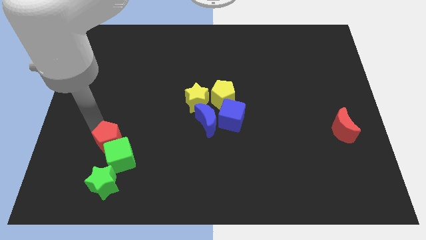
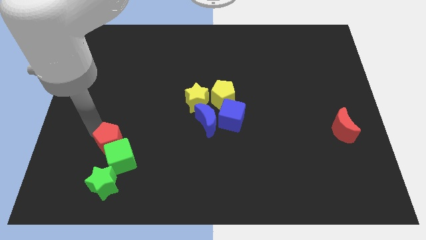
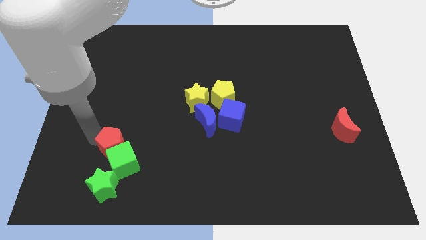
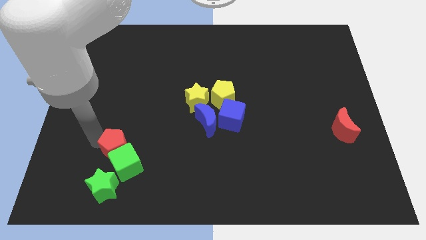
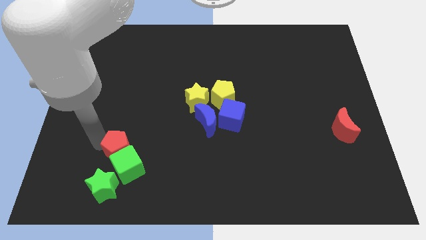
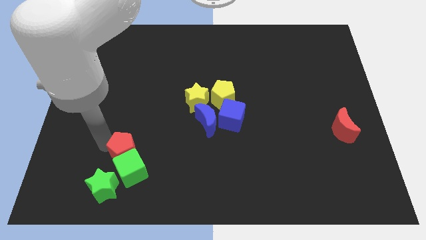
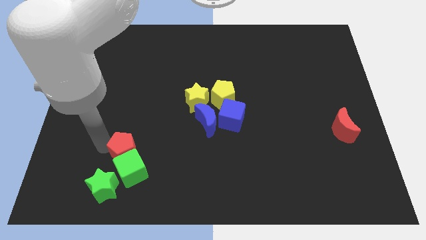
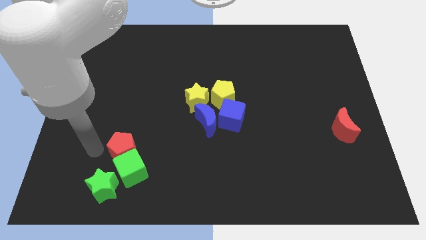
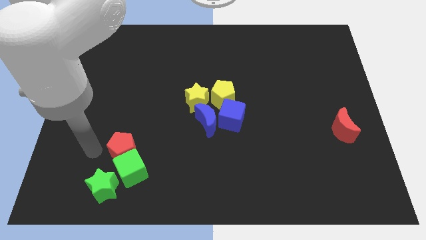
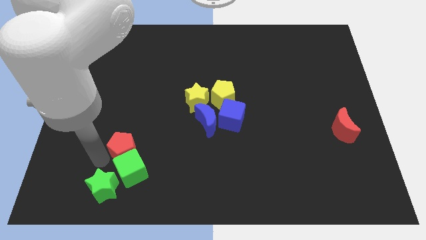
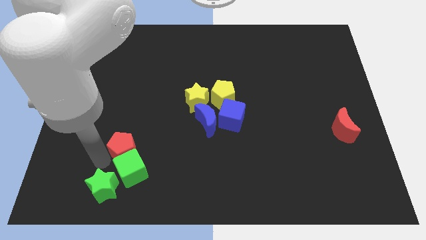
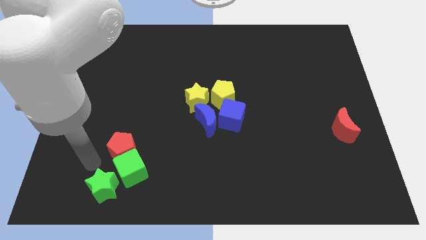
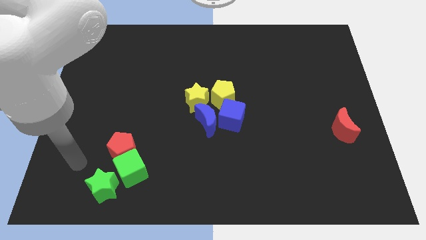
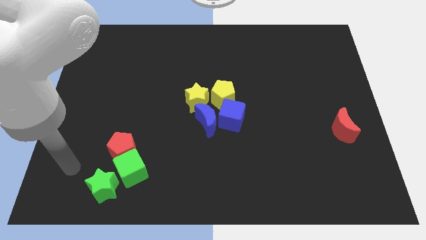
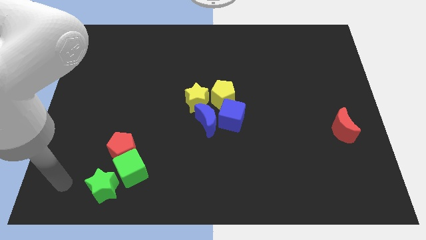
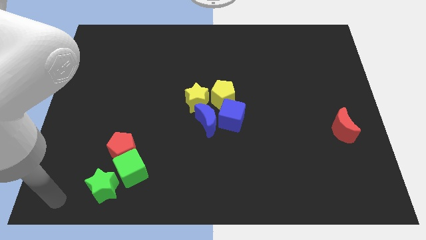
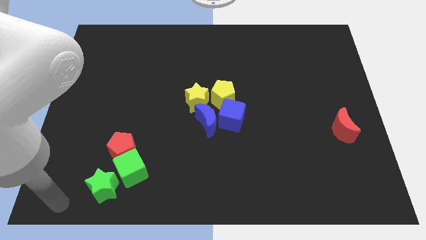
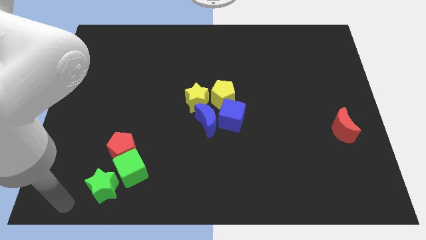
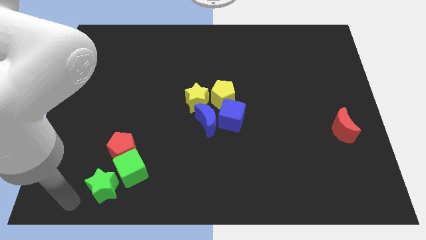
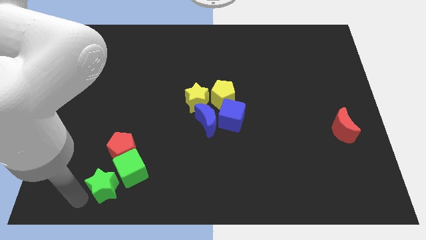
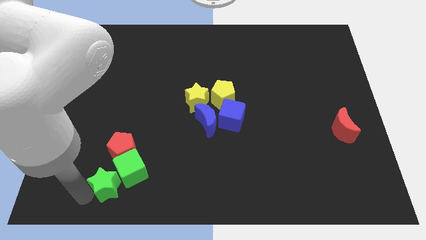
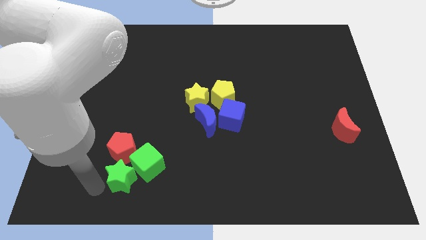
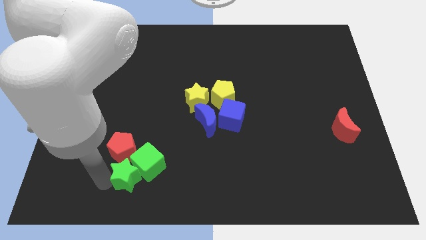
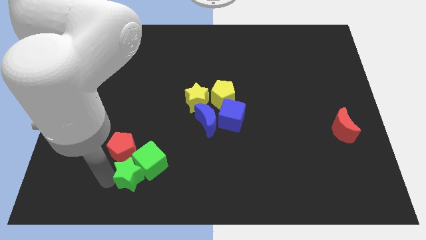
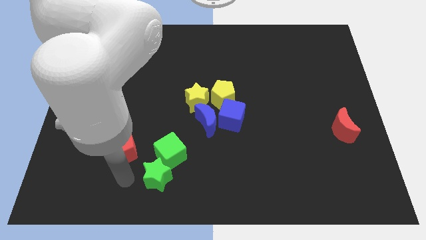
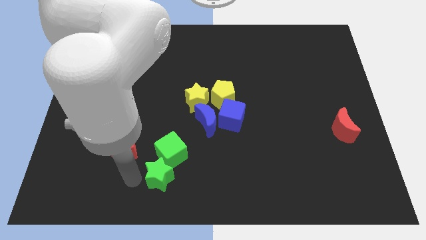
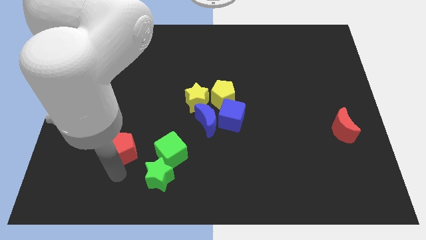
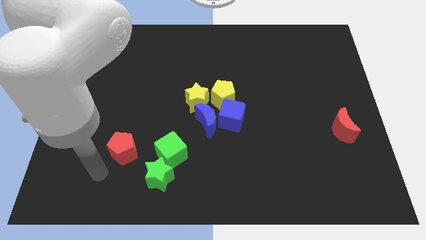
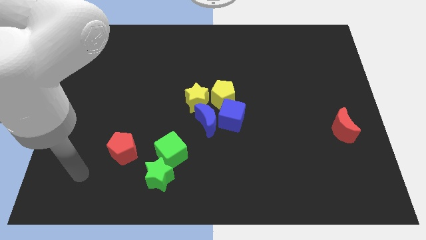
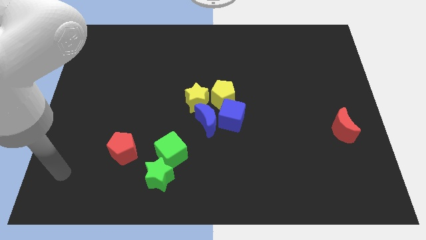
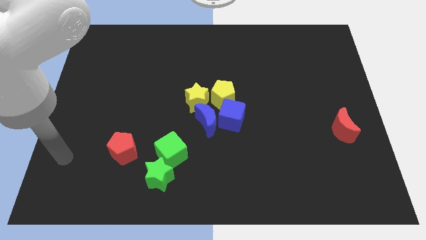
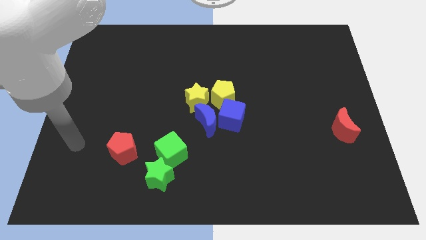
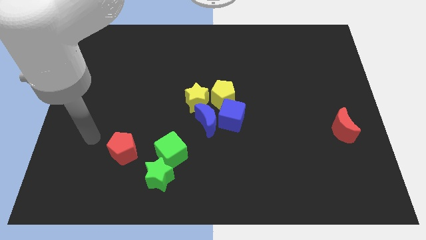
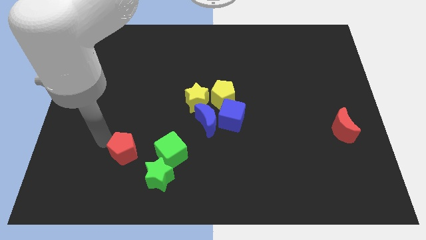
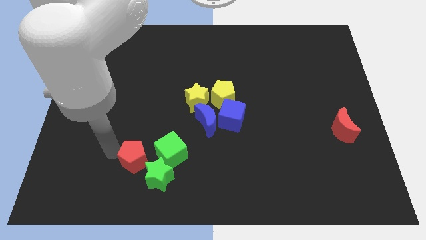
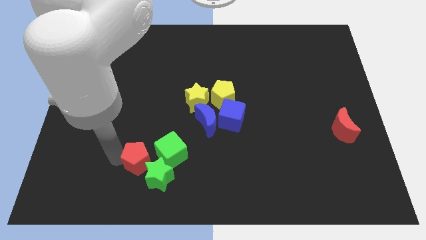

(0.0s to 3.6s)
push the green star into the green cube

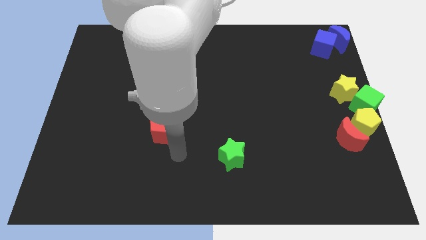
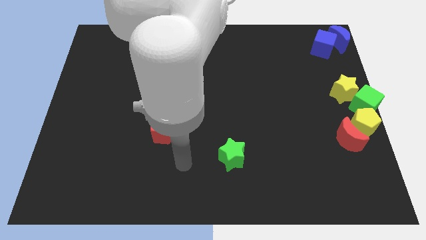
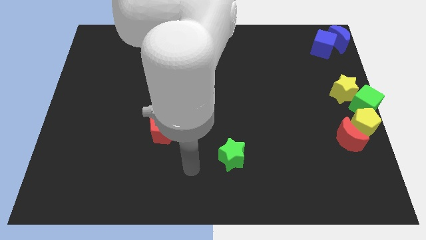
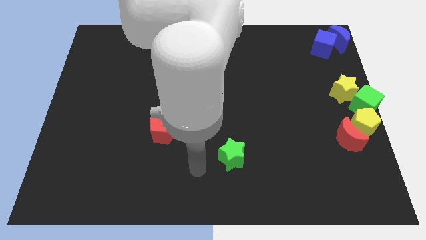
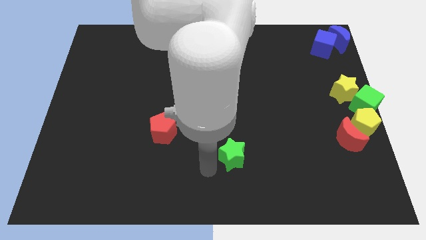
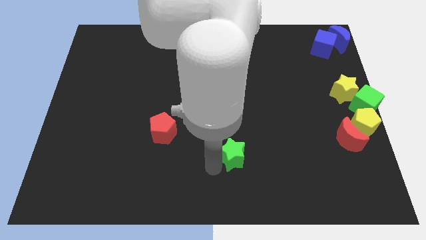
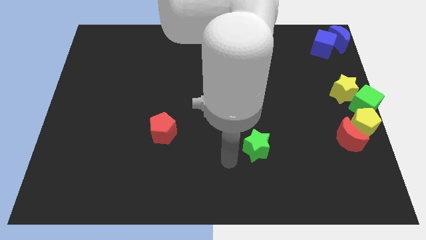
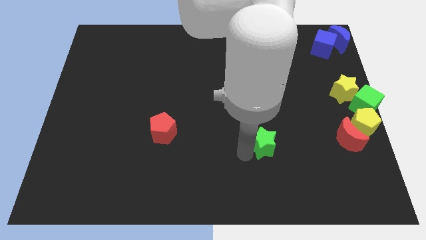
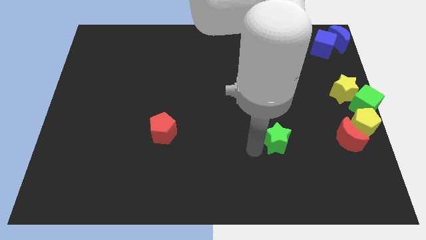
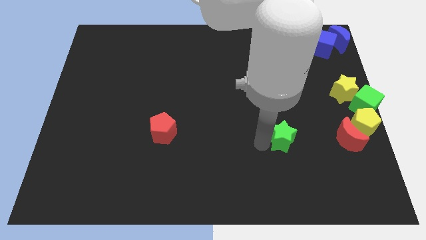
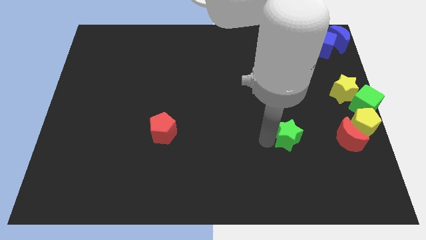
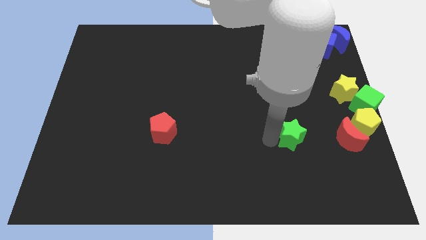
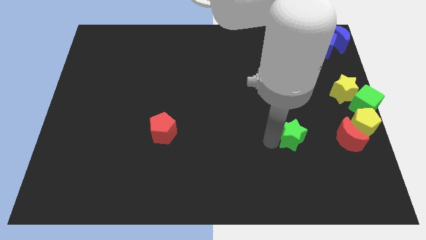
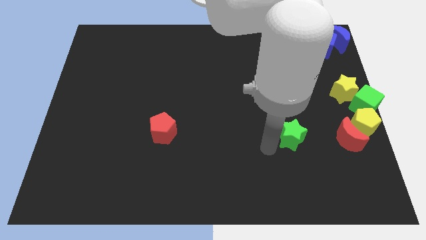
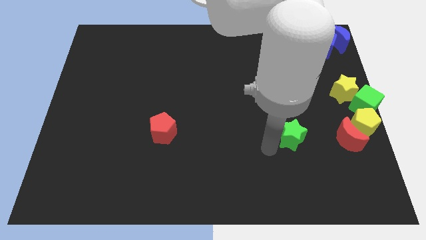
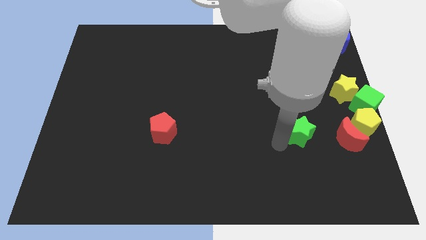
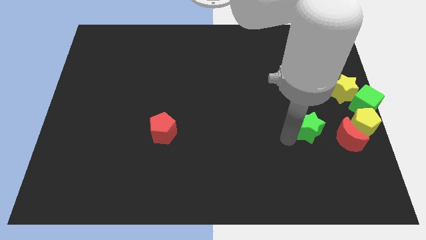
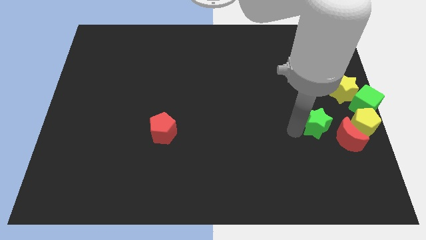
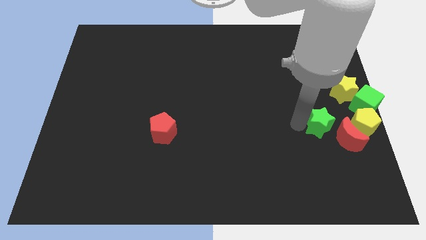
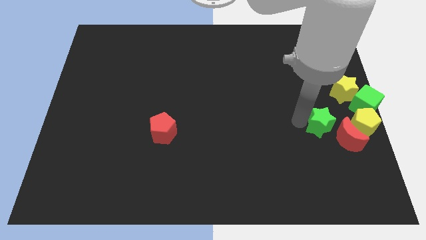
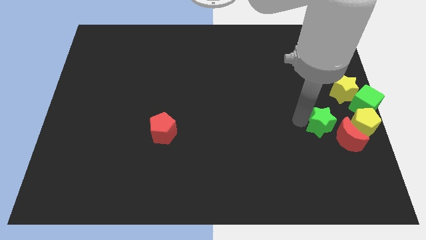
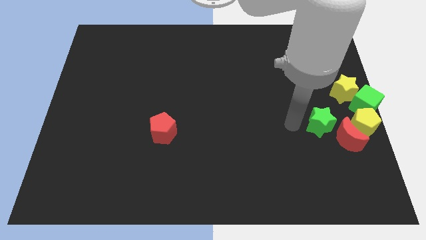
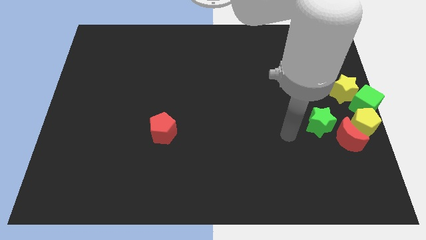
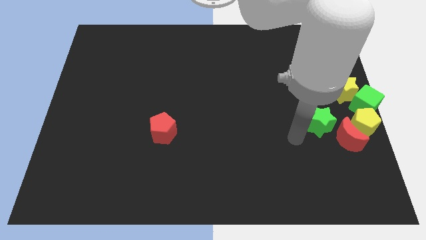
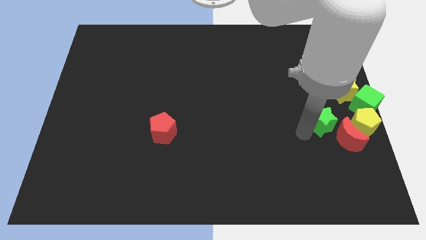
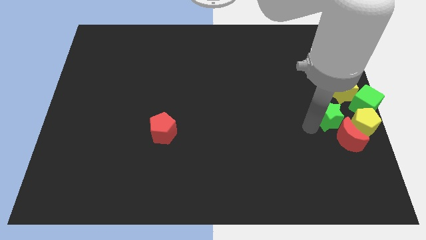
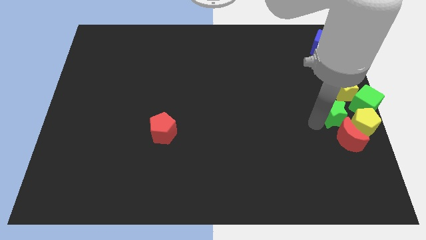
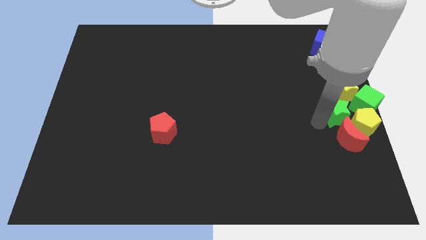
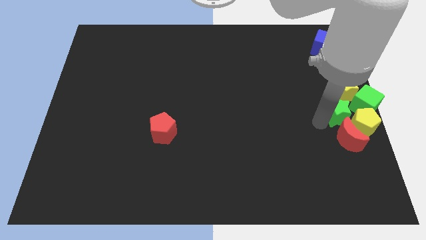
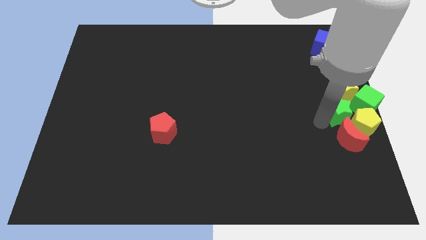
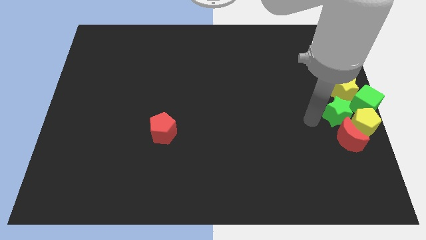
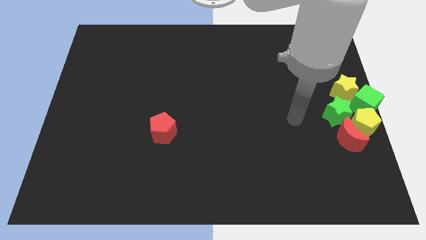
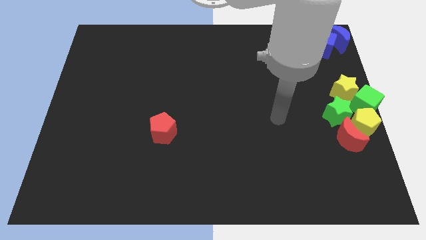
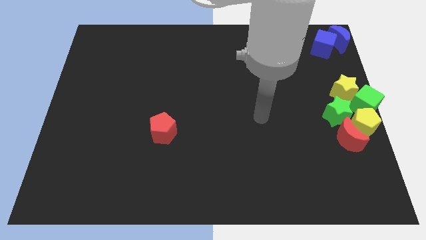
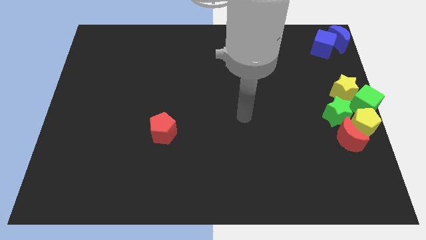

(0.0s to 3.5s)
add the green star to the group of blocks at the center right side of the board

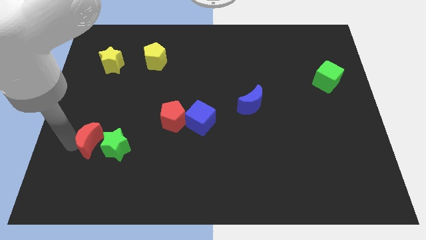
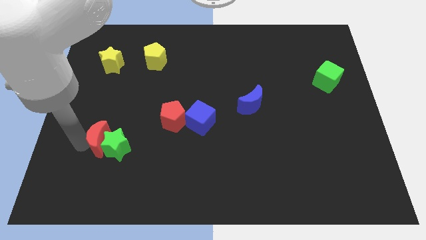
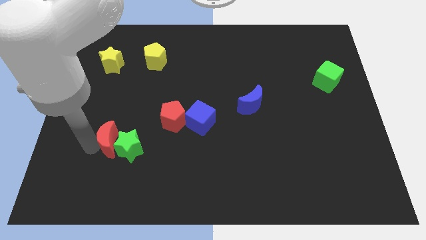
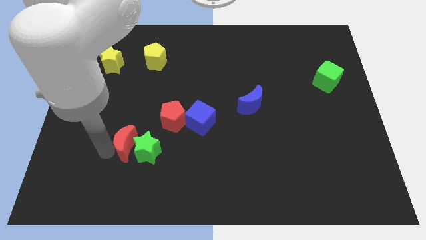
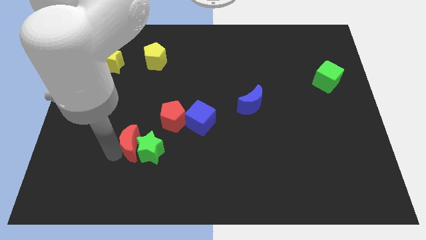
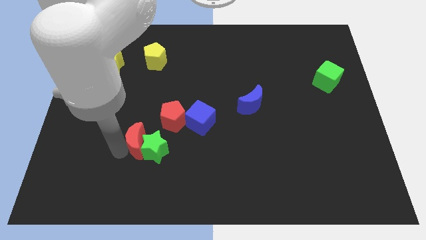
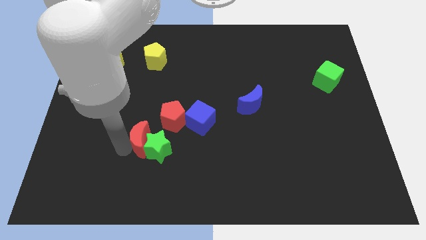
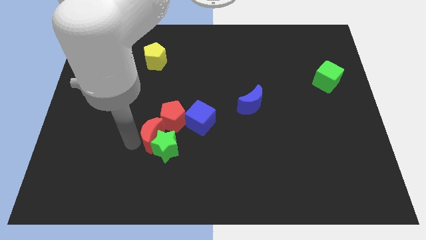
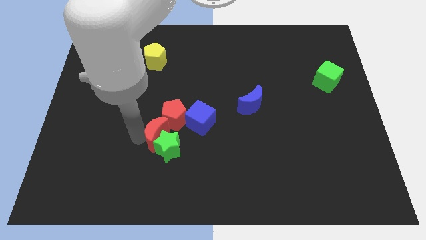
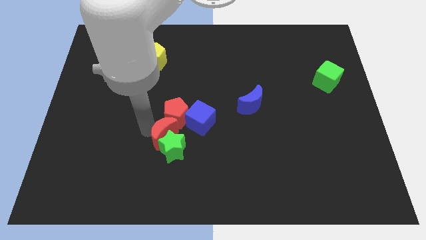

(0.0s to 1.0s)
place red moon and green star below red pentagon

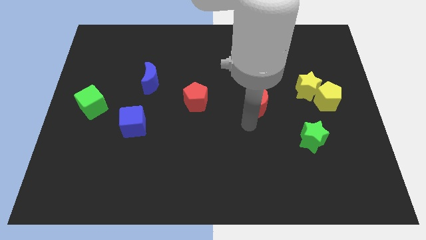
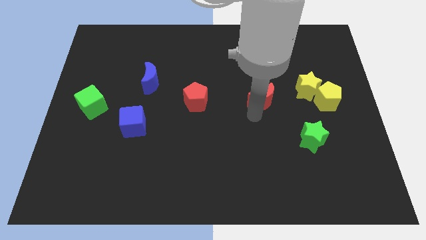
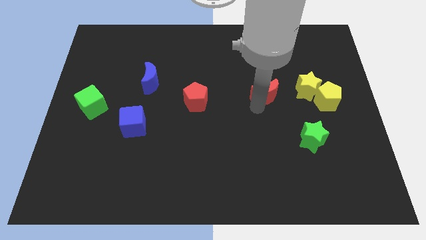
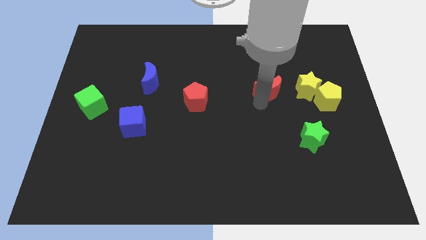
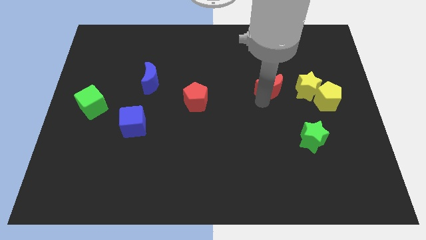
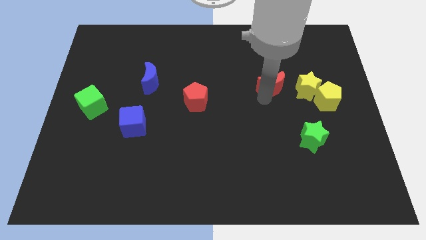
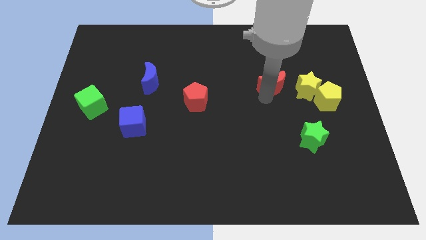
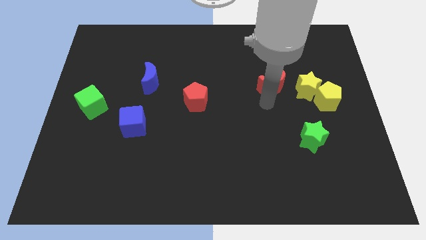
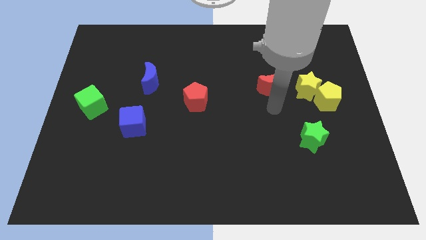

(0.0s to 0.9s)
move the red crescent towards the left to the yellow star
